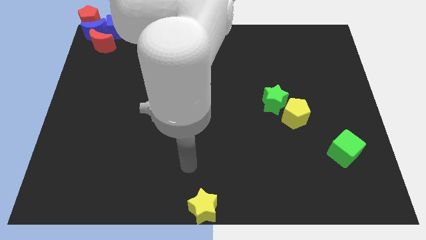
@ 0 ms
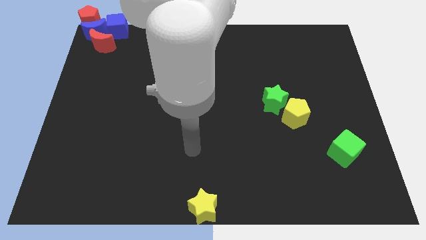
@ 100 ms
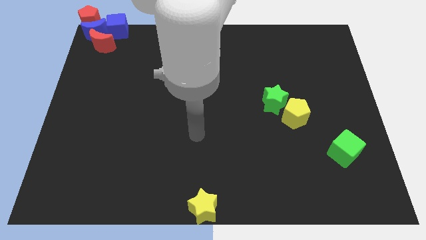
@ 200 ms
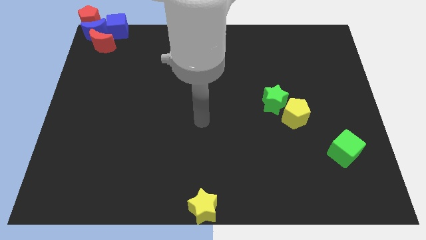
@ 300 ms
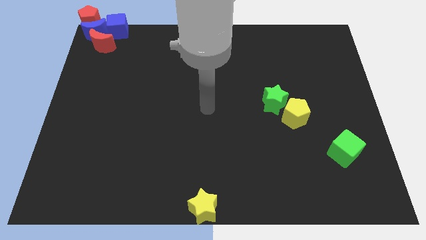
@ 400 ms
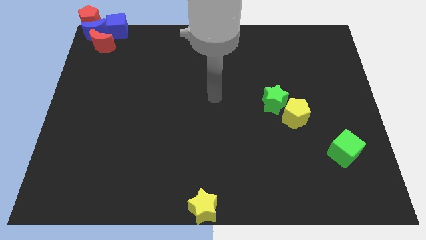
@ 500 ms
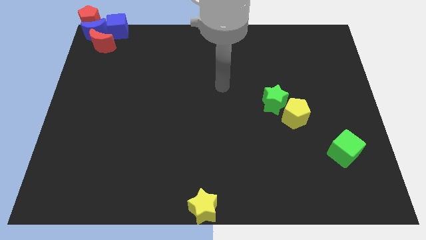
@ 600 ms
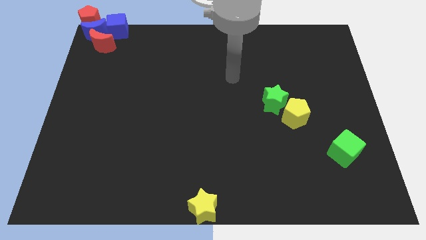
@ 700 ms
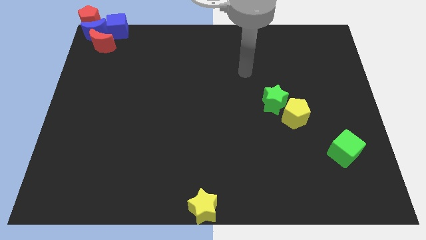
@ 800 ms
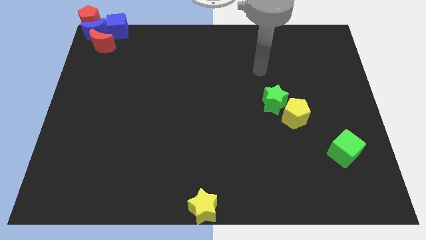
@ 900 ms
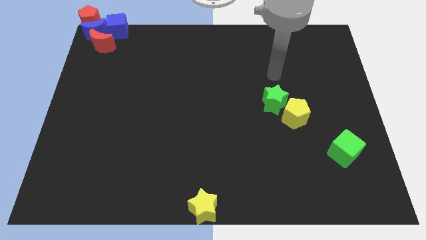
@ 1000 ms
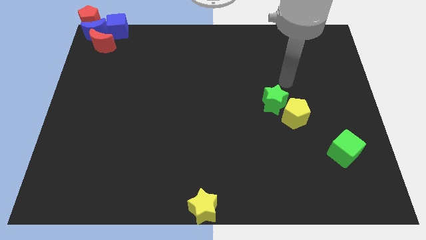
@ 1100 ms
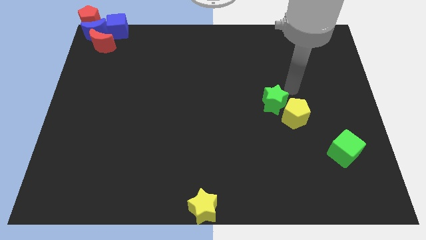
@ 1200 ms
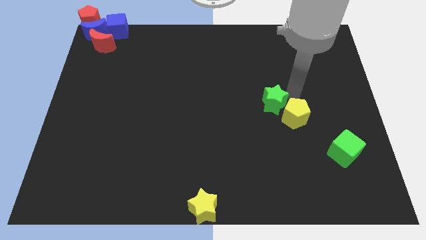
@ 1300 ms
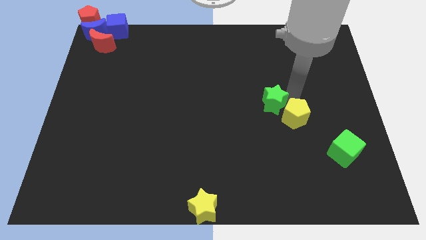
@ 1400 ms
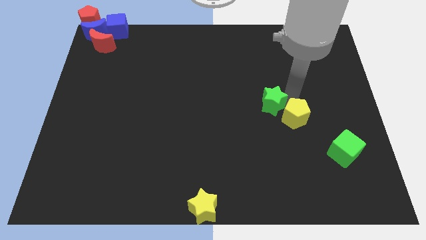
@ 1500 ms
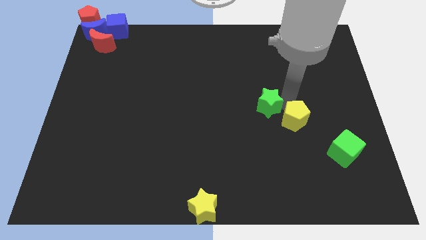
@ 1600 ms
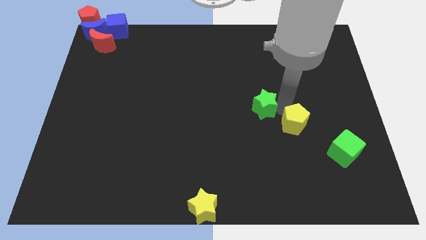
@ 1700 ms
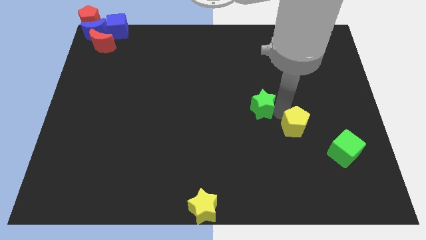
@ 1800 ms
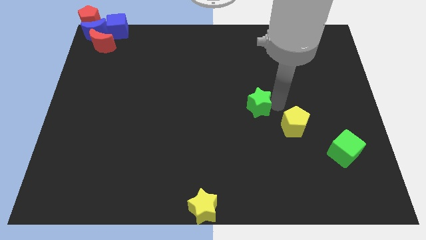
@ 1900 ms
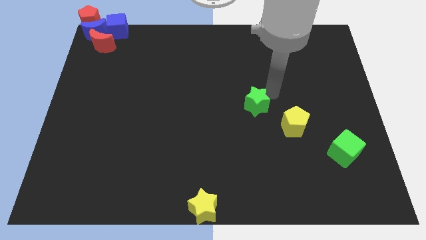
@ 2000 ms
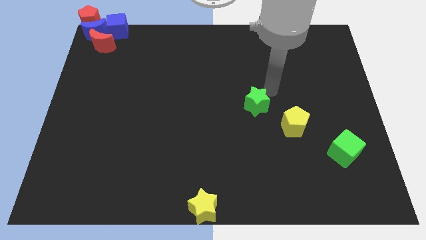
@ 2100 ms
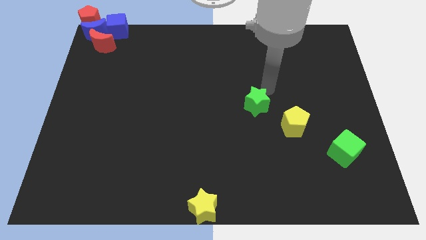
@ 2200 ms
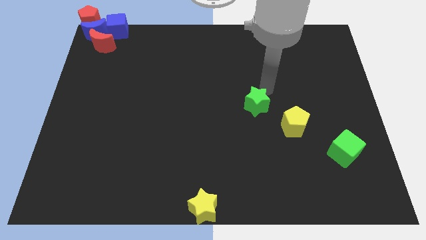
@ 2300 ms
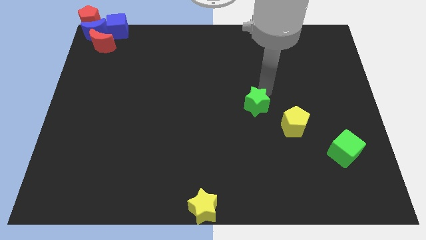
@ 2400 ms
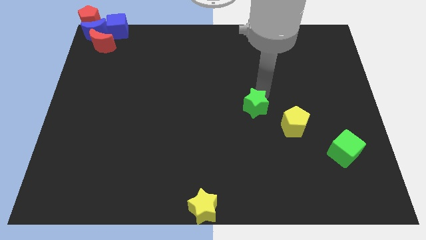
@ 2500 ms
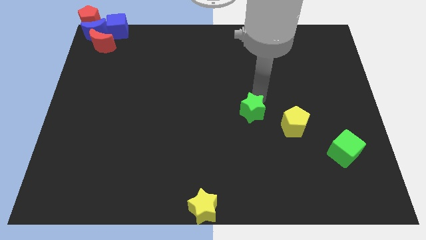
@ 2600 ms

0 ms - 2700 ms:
separate green star away from yellow pentagon

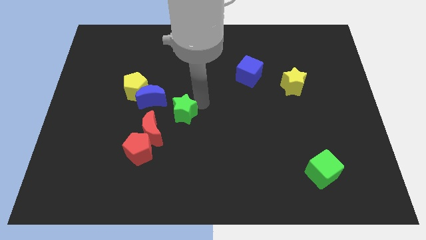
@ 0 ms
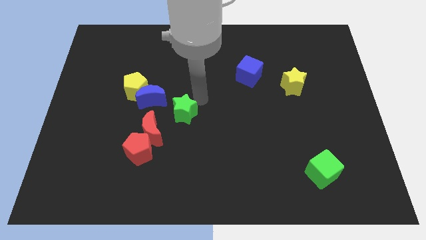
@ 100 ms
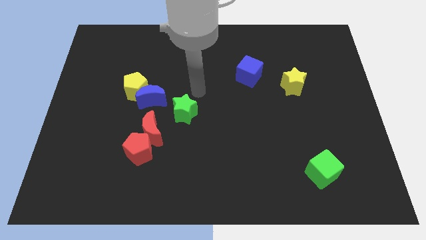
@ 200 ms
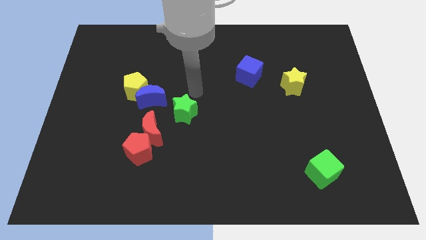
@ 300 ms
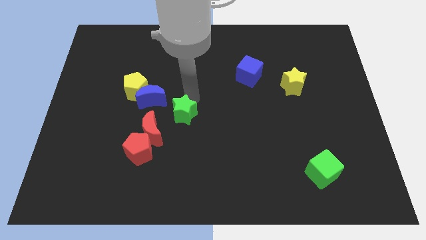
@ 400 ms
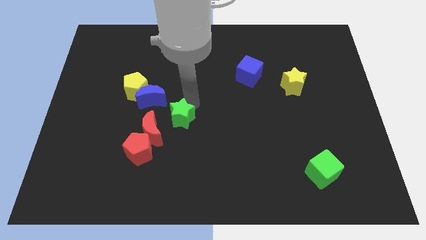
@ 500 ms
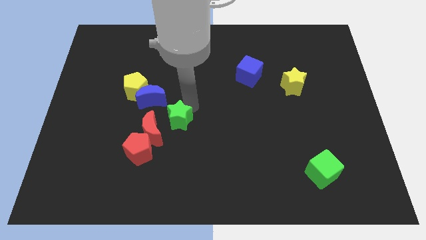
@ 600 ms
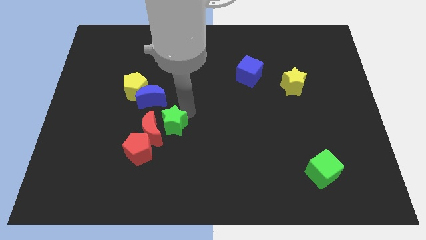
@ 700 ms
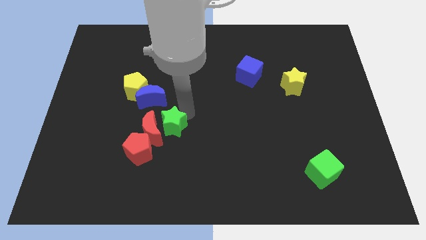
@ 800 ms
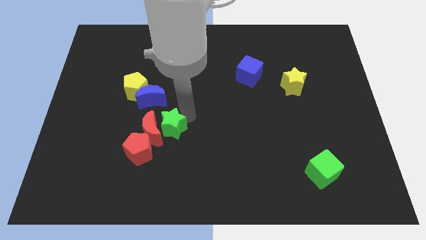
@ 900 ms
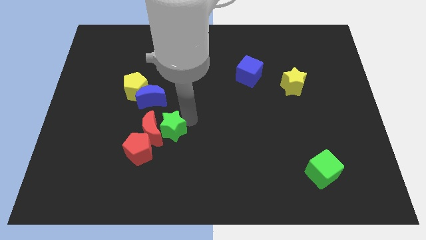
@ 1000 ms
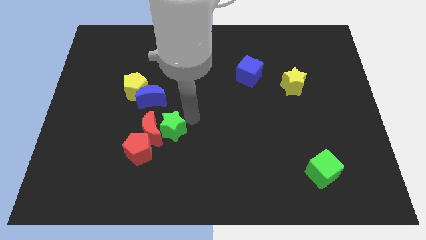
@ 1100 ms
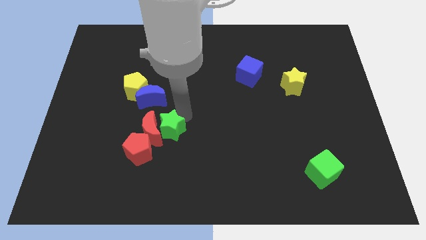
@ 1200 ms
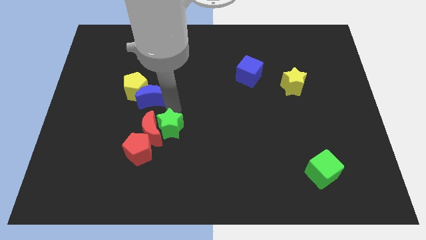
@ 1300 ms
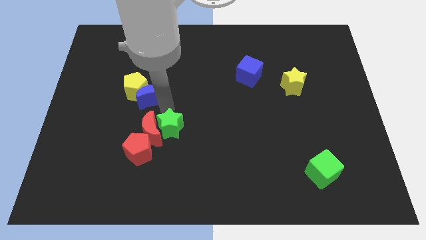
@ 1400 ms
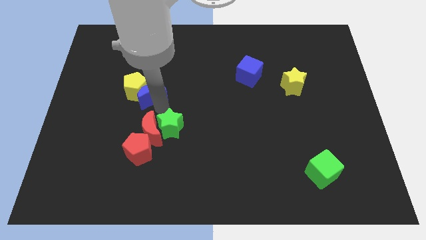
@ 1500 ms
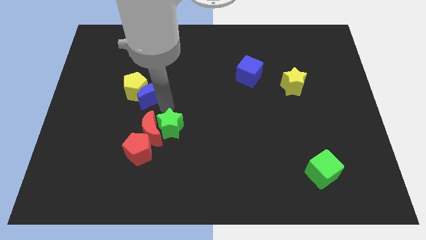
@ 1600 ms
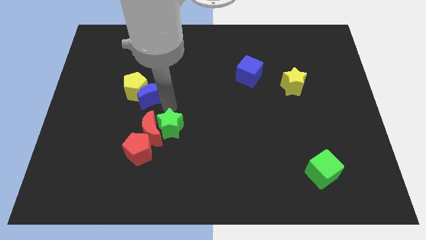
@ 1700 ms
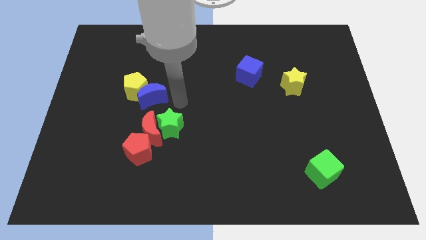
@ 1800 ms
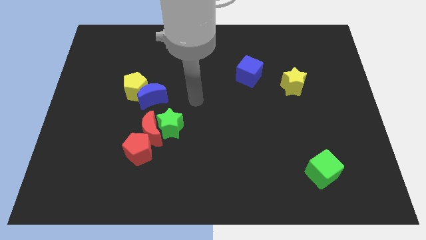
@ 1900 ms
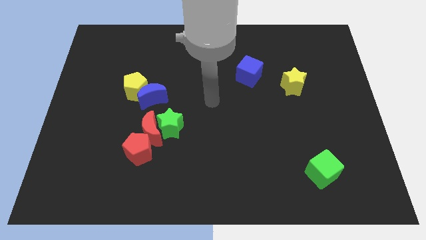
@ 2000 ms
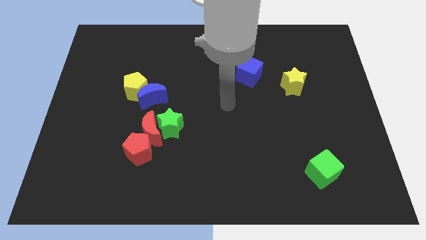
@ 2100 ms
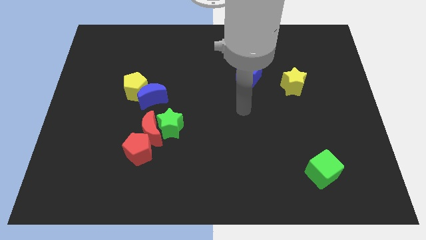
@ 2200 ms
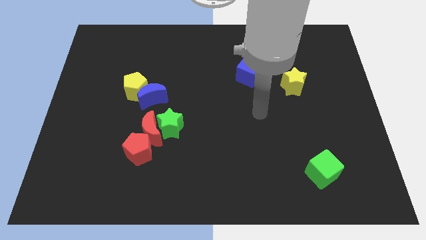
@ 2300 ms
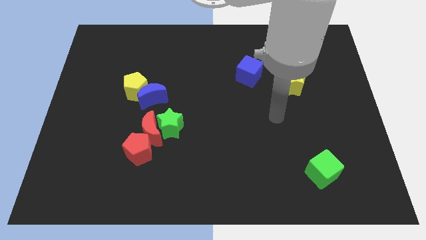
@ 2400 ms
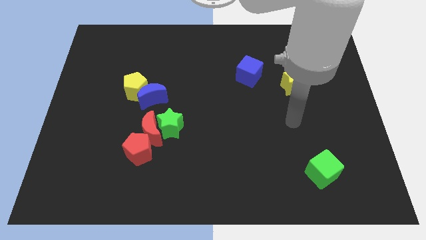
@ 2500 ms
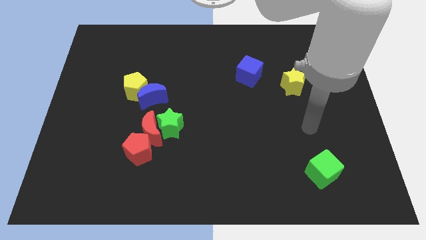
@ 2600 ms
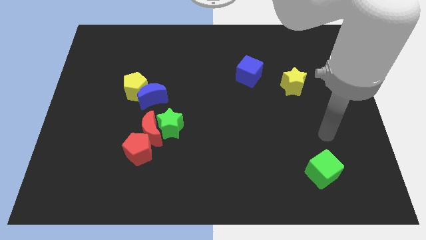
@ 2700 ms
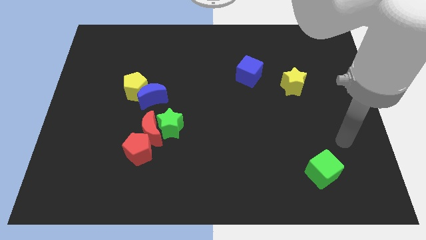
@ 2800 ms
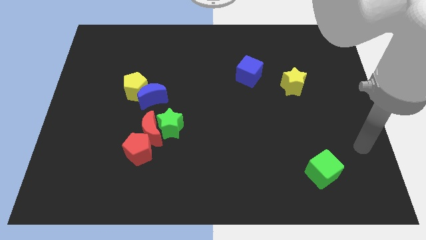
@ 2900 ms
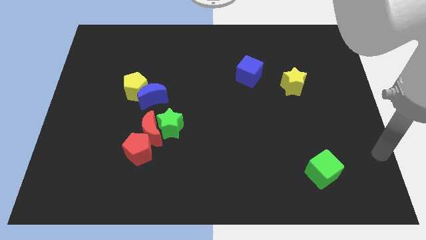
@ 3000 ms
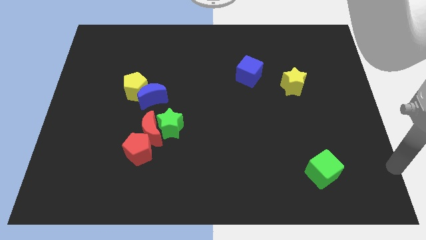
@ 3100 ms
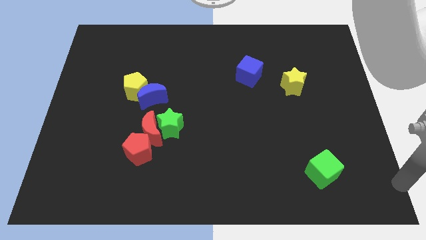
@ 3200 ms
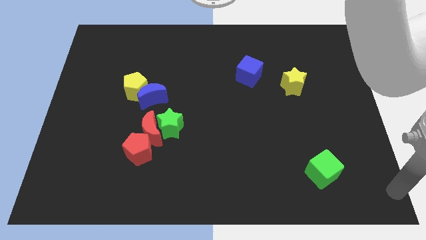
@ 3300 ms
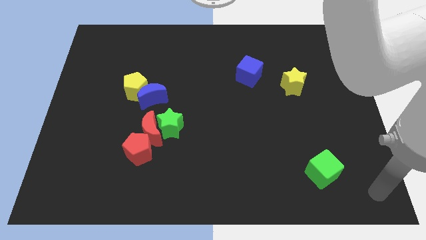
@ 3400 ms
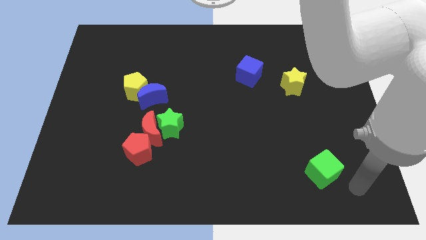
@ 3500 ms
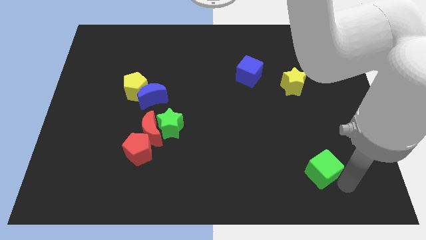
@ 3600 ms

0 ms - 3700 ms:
move your arm away from the green star

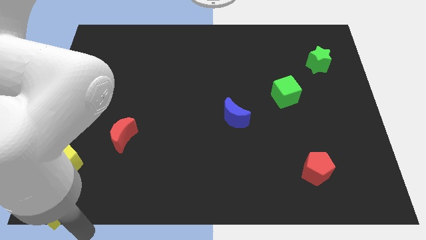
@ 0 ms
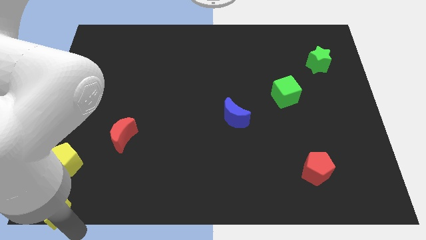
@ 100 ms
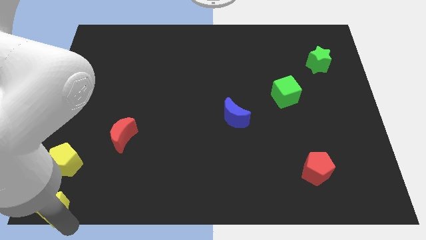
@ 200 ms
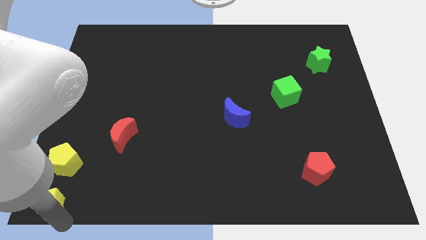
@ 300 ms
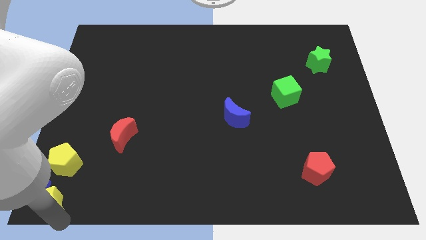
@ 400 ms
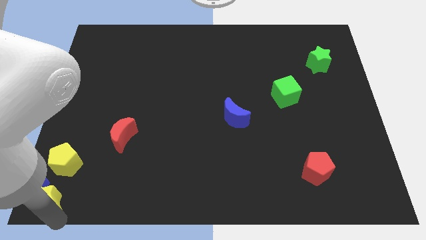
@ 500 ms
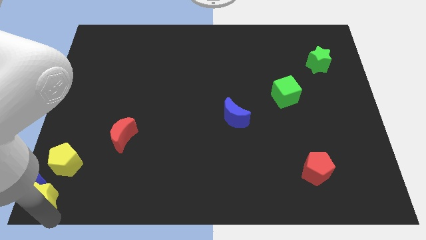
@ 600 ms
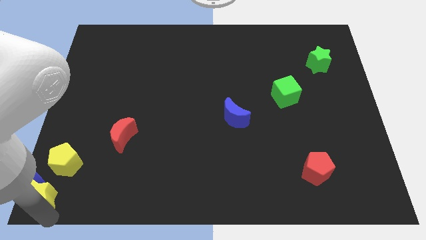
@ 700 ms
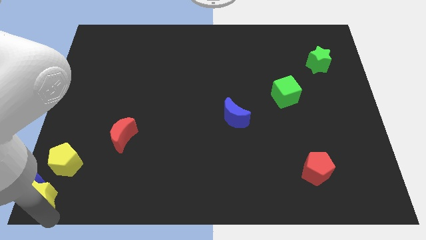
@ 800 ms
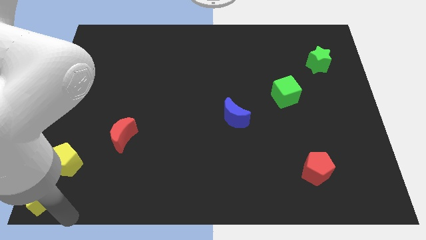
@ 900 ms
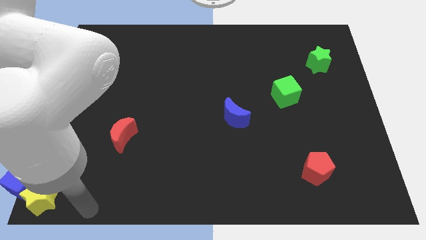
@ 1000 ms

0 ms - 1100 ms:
push yellow star in to blue cube

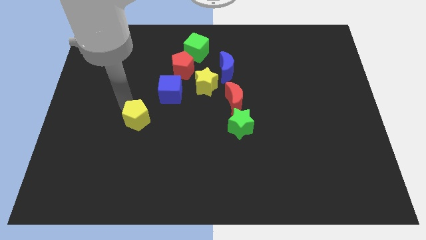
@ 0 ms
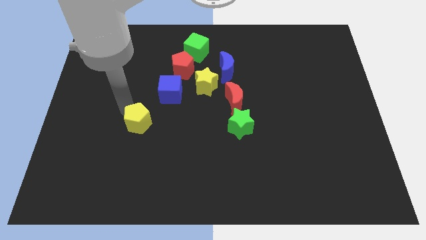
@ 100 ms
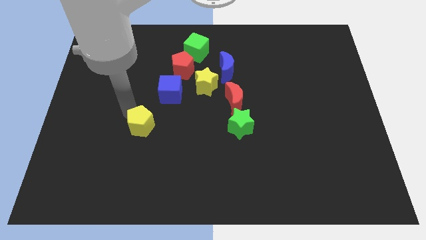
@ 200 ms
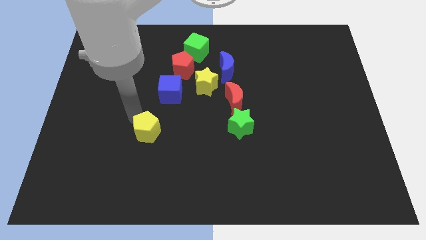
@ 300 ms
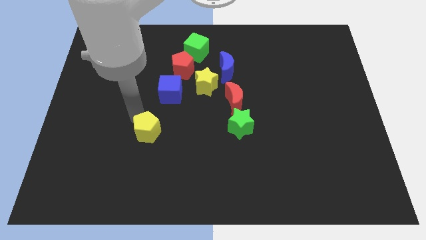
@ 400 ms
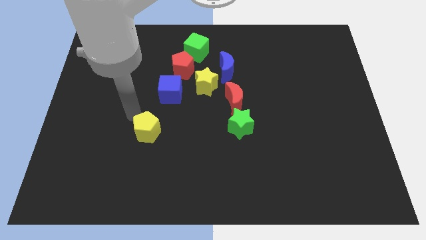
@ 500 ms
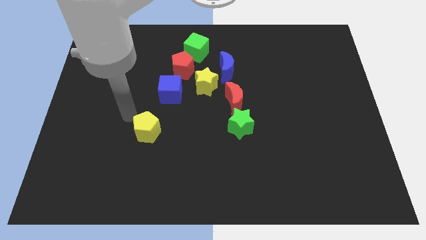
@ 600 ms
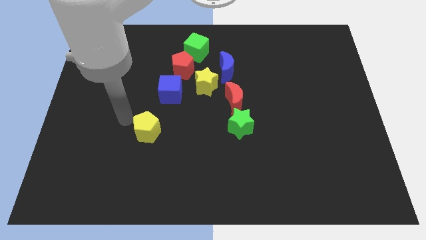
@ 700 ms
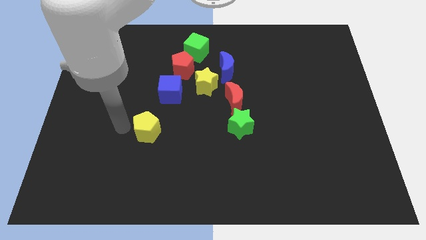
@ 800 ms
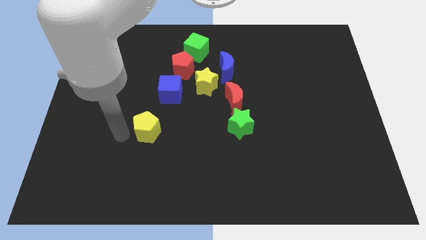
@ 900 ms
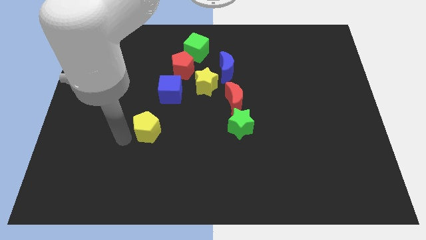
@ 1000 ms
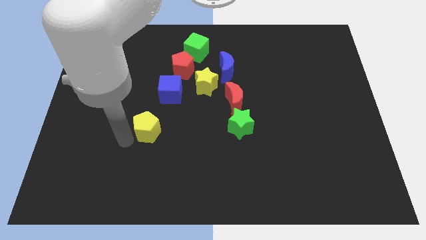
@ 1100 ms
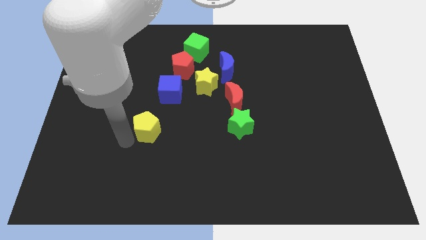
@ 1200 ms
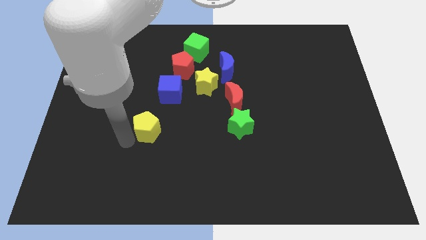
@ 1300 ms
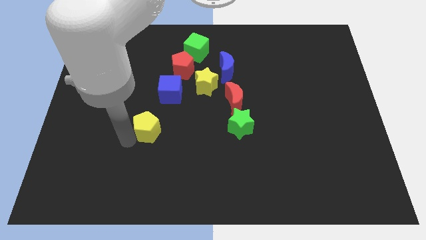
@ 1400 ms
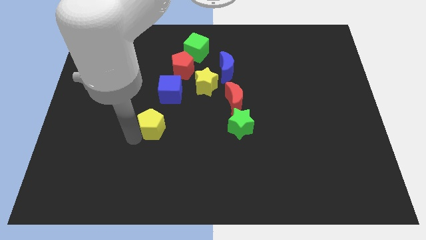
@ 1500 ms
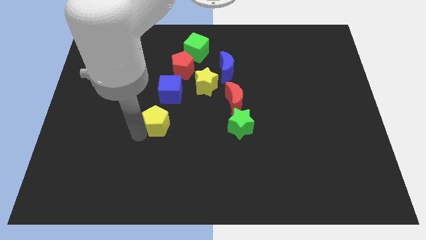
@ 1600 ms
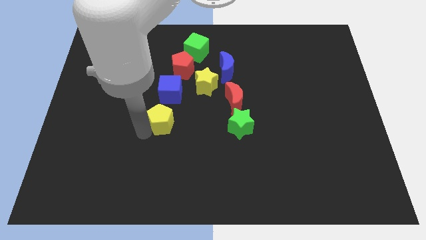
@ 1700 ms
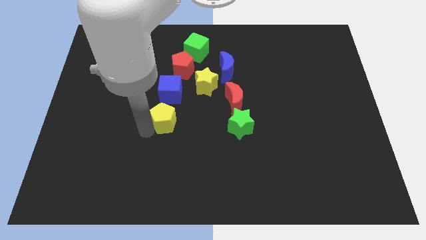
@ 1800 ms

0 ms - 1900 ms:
place the yellow pentagon below to the blue cube
